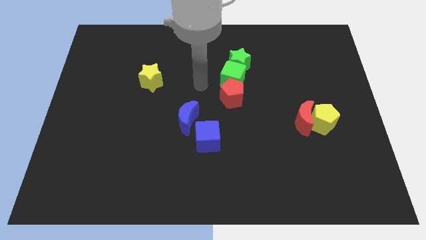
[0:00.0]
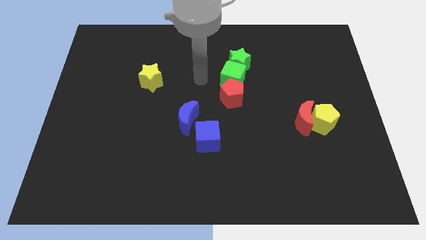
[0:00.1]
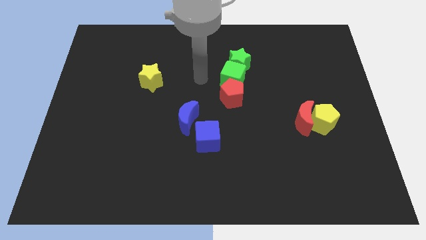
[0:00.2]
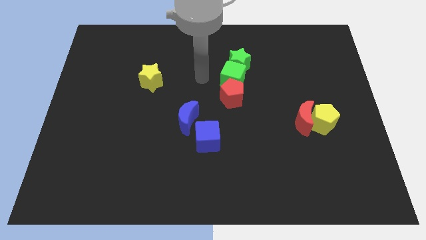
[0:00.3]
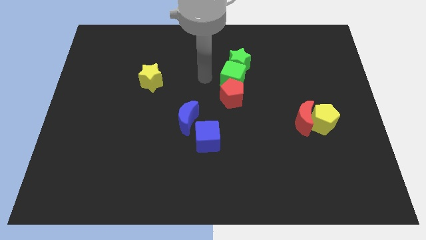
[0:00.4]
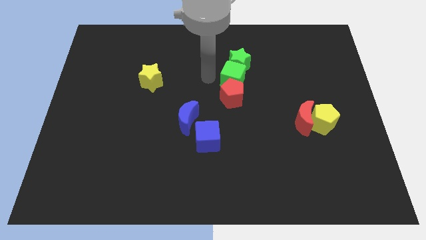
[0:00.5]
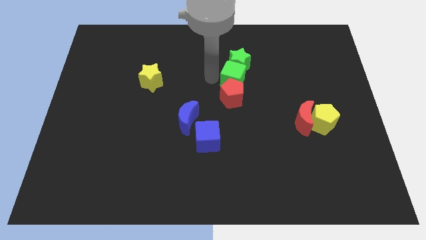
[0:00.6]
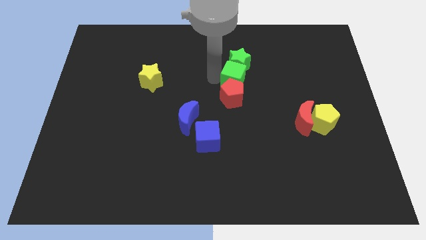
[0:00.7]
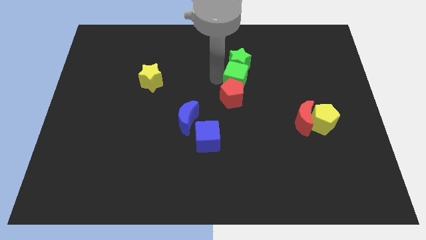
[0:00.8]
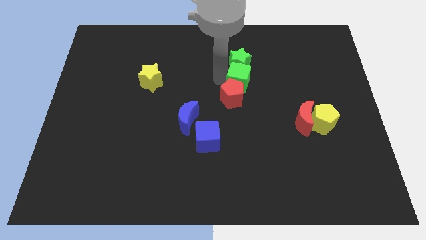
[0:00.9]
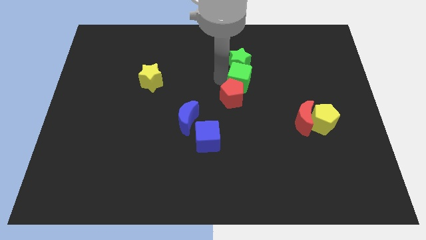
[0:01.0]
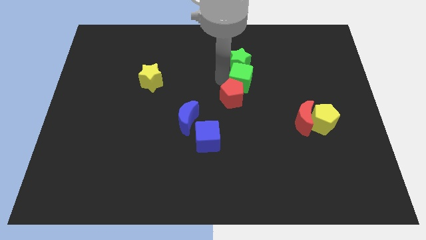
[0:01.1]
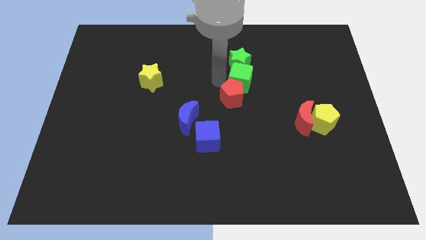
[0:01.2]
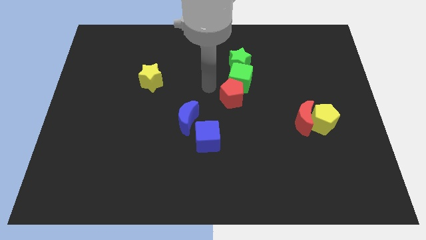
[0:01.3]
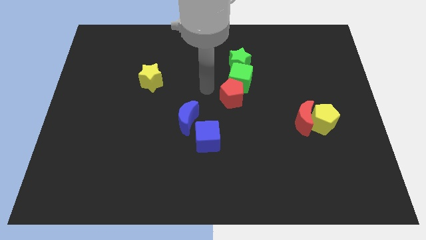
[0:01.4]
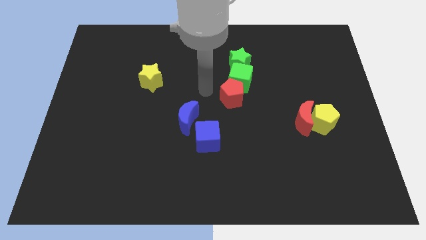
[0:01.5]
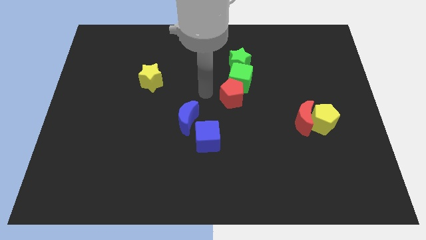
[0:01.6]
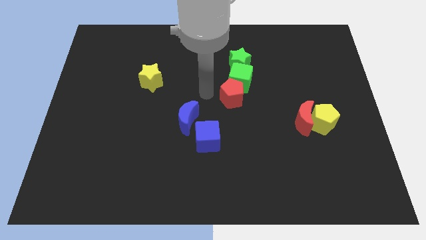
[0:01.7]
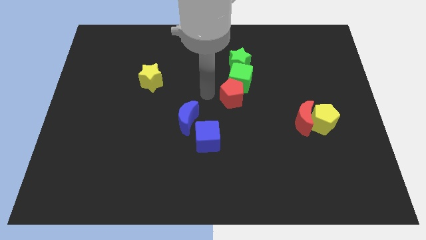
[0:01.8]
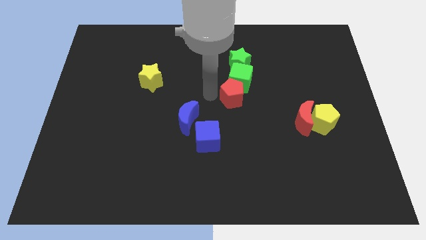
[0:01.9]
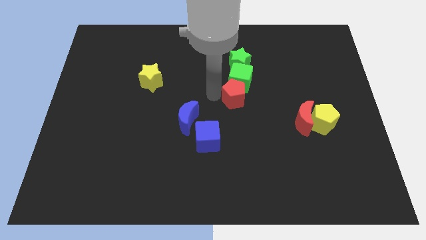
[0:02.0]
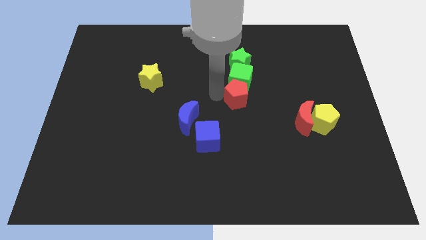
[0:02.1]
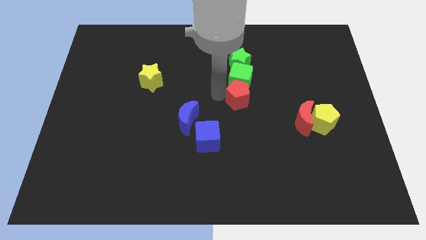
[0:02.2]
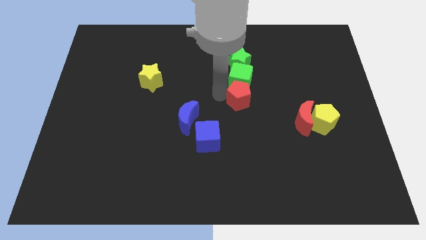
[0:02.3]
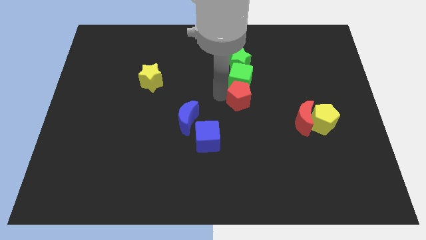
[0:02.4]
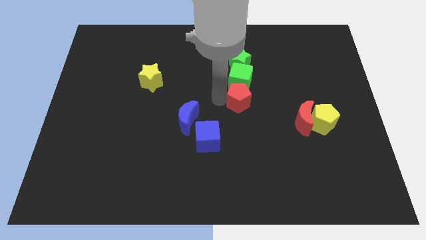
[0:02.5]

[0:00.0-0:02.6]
adjust the green cube and red pentagon below green star

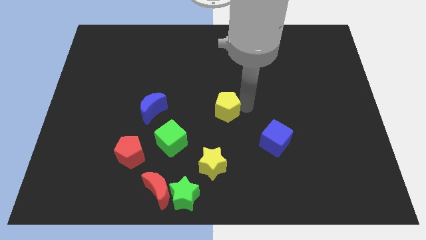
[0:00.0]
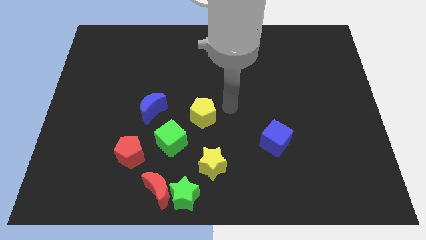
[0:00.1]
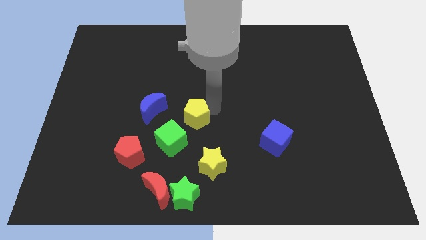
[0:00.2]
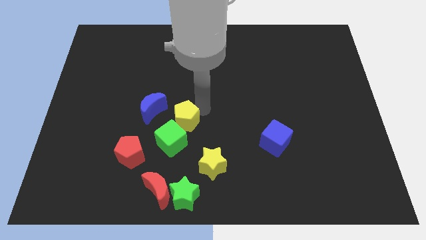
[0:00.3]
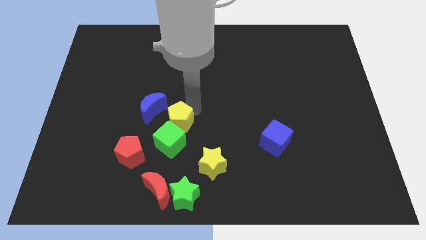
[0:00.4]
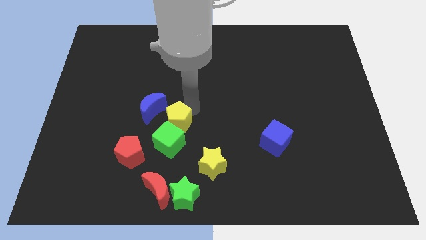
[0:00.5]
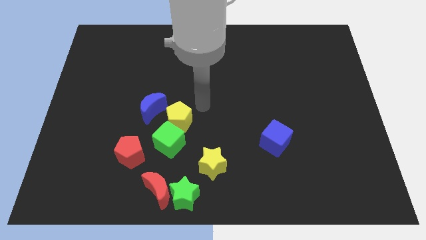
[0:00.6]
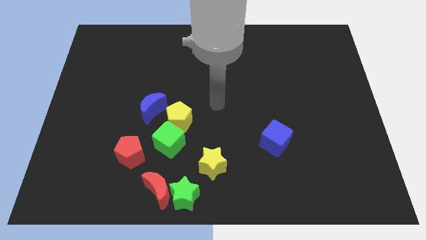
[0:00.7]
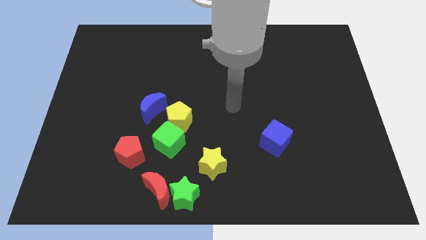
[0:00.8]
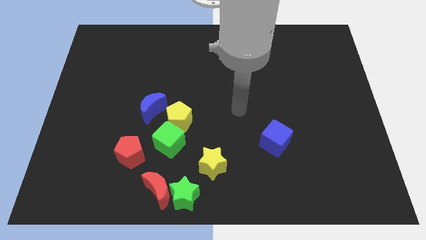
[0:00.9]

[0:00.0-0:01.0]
push yellow pentagon into the green cube

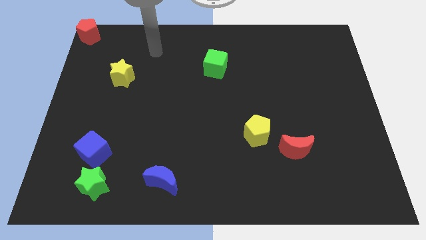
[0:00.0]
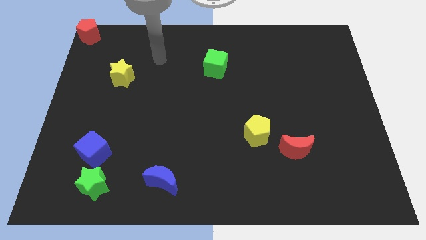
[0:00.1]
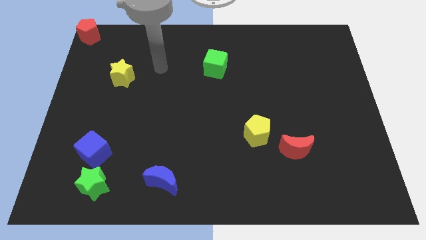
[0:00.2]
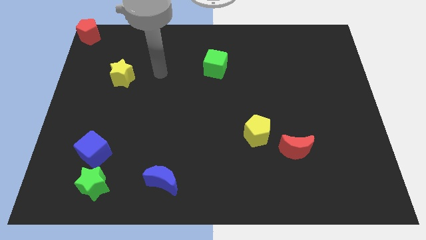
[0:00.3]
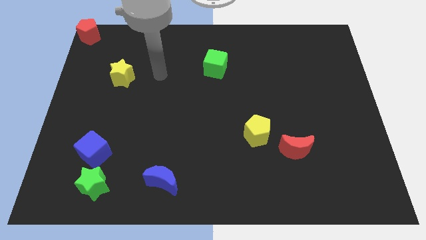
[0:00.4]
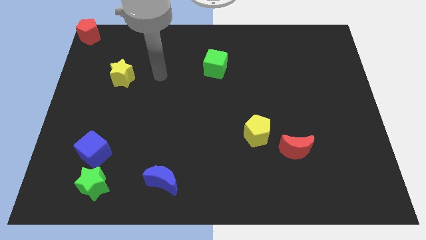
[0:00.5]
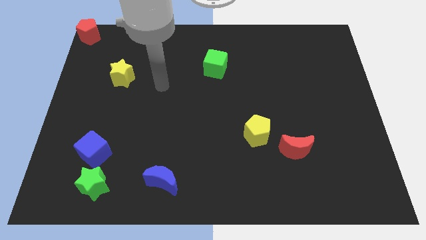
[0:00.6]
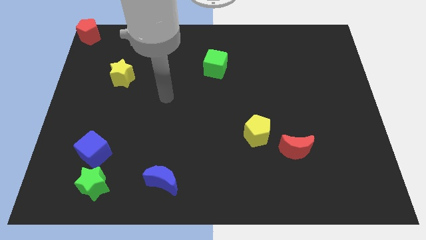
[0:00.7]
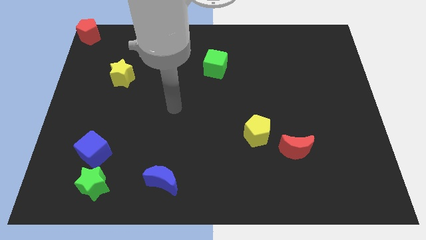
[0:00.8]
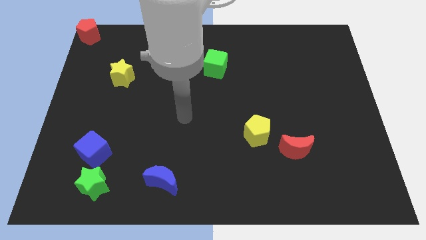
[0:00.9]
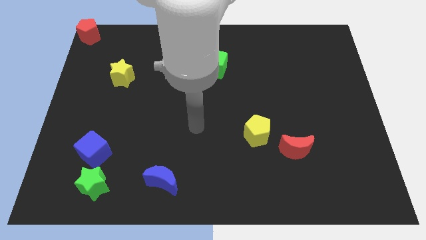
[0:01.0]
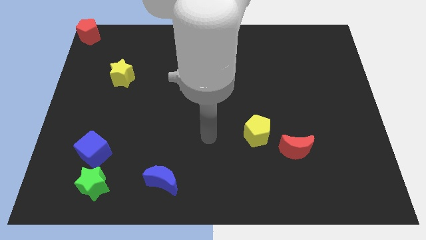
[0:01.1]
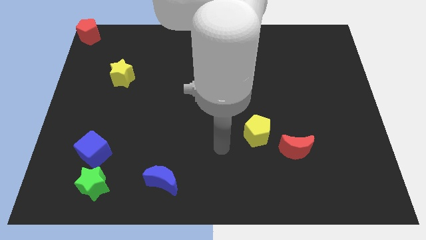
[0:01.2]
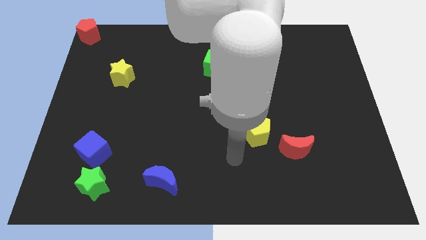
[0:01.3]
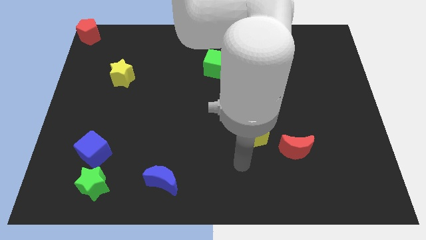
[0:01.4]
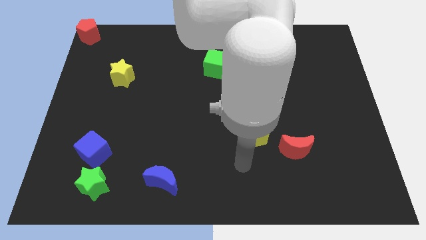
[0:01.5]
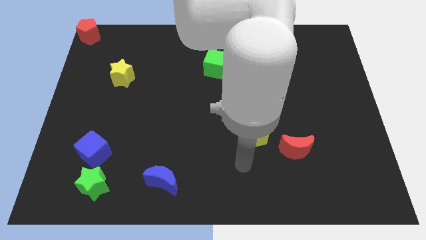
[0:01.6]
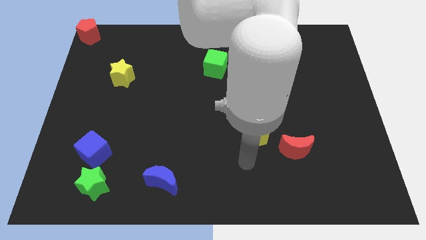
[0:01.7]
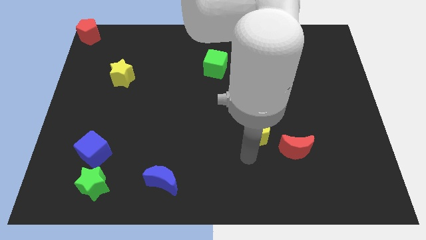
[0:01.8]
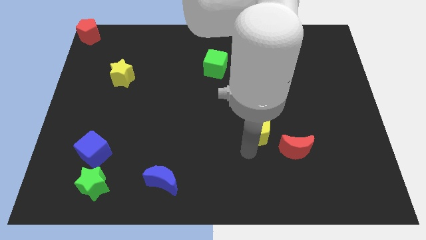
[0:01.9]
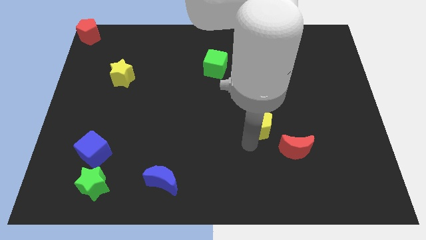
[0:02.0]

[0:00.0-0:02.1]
touch the yellow pentagon

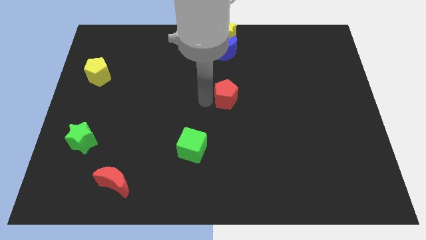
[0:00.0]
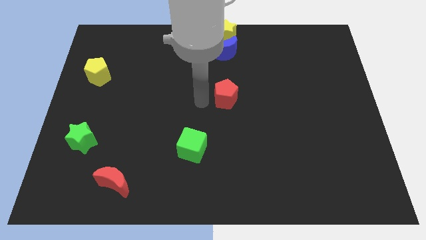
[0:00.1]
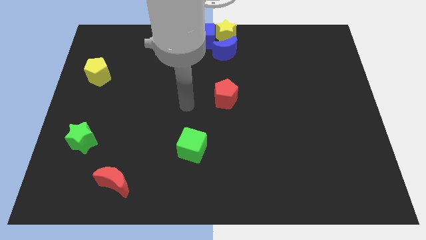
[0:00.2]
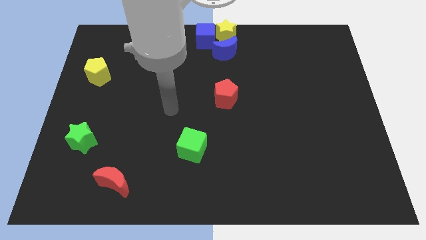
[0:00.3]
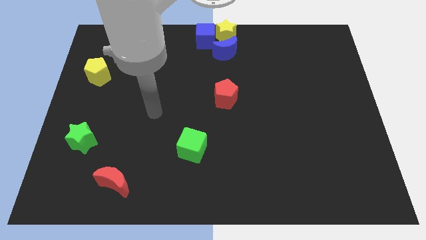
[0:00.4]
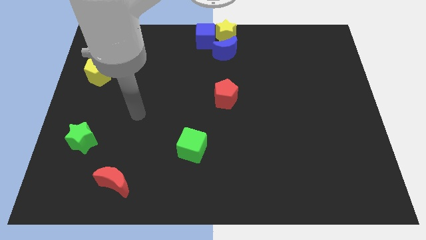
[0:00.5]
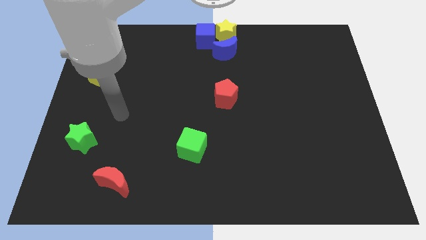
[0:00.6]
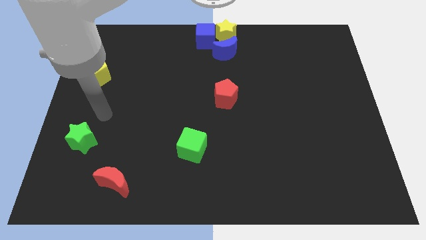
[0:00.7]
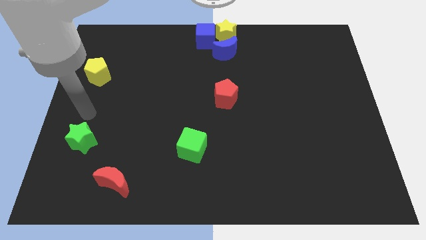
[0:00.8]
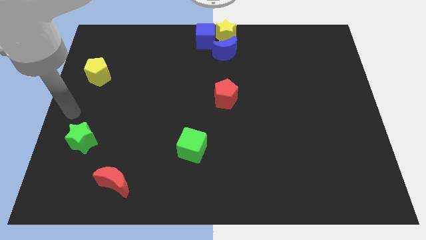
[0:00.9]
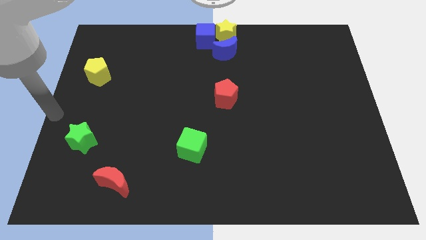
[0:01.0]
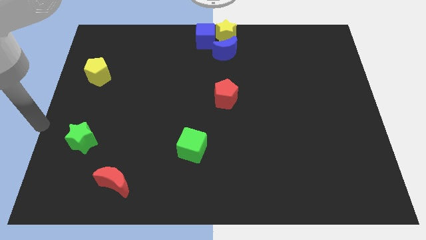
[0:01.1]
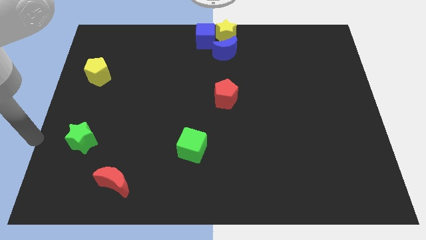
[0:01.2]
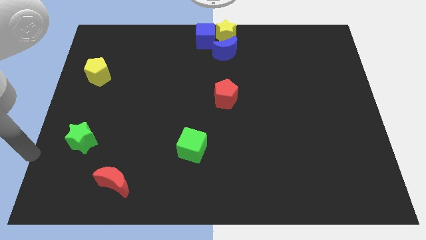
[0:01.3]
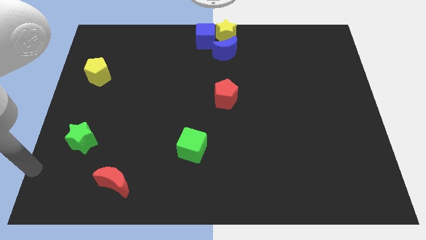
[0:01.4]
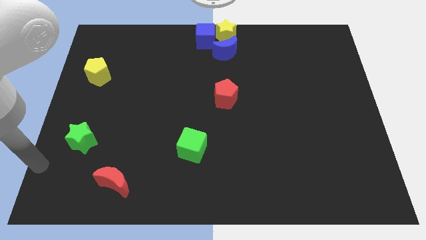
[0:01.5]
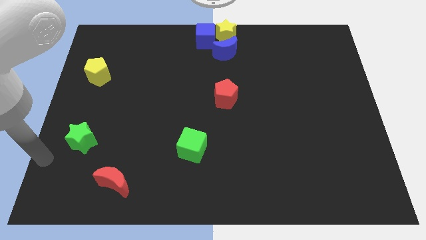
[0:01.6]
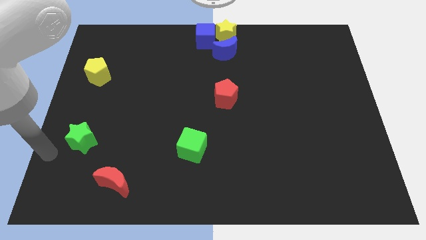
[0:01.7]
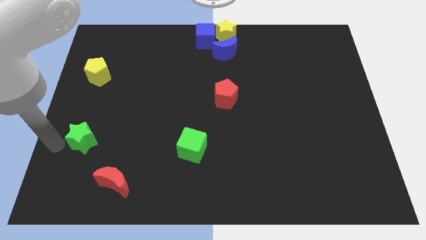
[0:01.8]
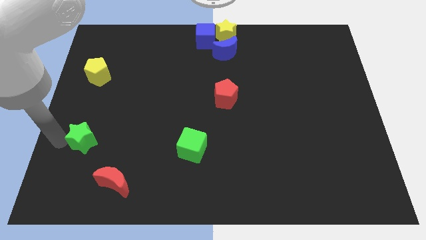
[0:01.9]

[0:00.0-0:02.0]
point your arm towards the green star

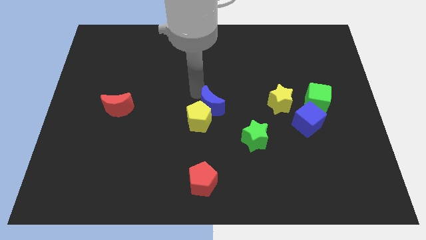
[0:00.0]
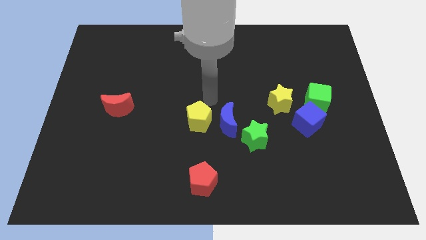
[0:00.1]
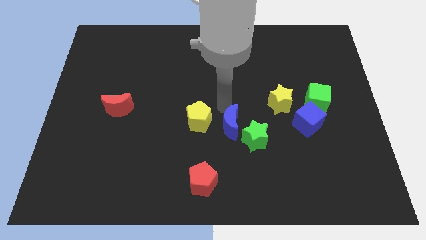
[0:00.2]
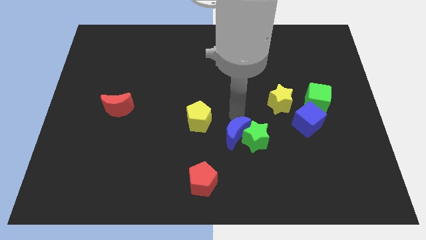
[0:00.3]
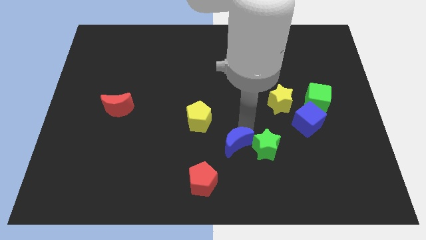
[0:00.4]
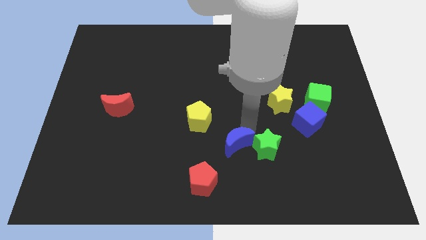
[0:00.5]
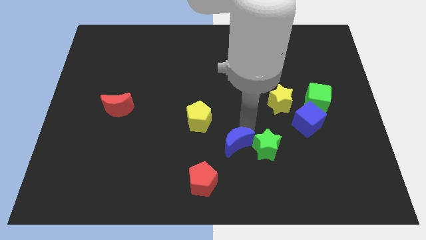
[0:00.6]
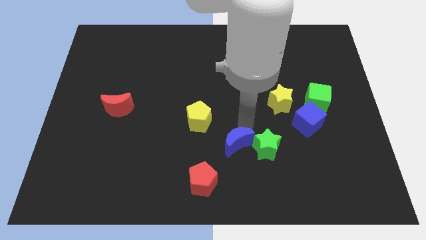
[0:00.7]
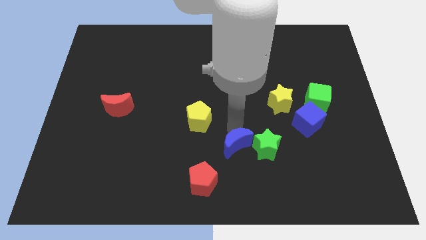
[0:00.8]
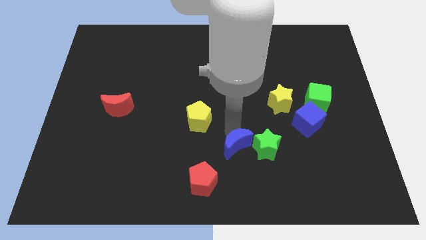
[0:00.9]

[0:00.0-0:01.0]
push the blue crescent to the left of the green star

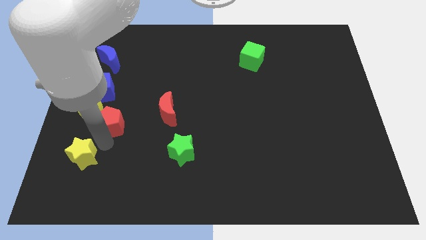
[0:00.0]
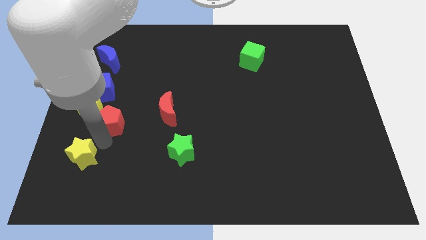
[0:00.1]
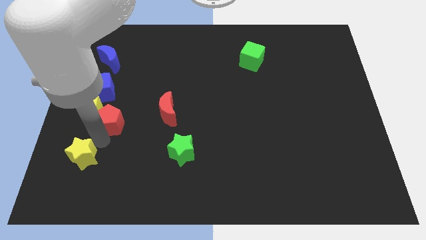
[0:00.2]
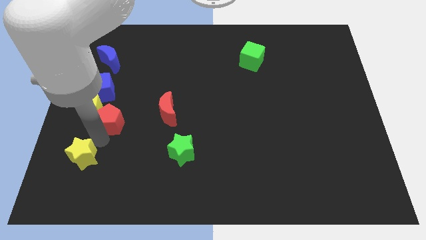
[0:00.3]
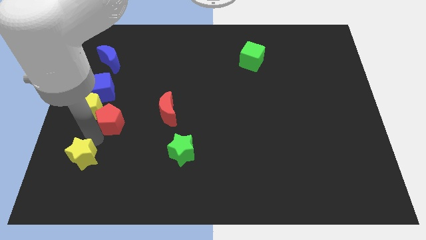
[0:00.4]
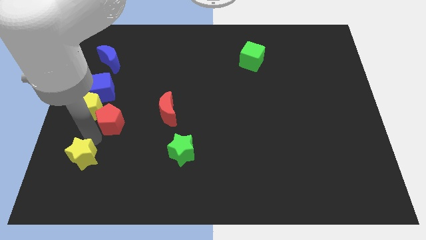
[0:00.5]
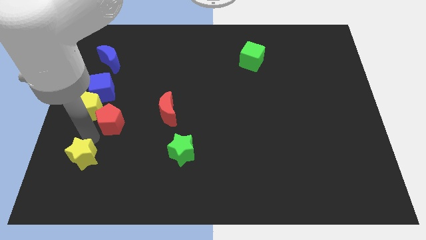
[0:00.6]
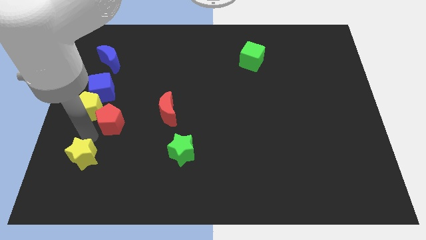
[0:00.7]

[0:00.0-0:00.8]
push red pentagon slightly up
